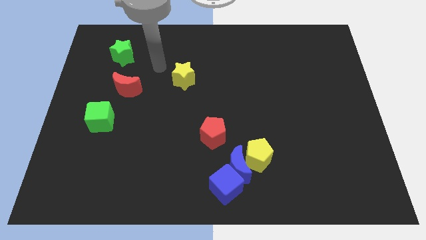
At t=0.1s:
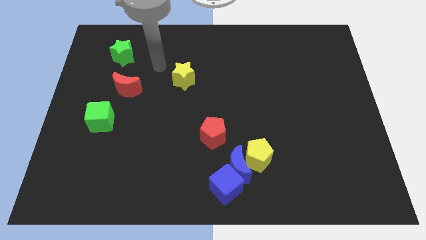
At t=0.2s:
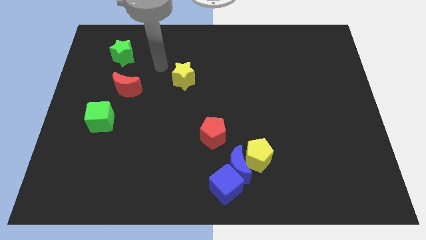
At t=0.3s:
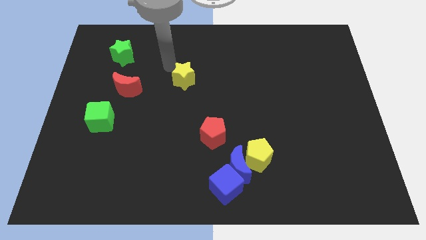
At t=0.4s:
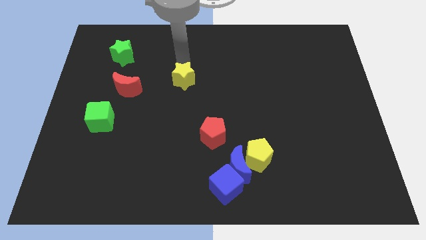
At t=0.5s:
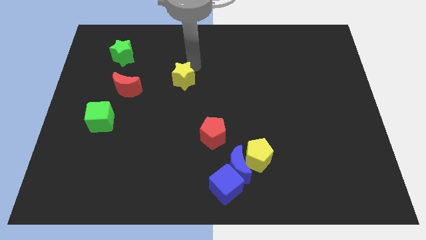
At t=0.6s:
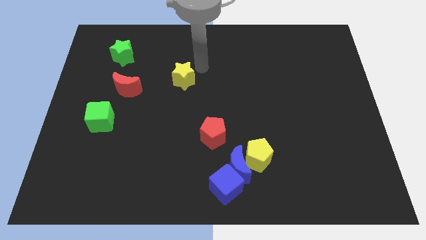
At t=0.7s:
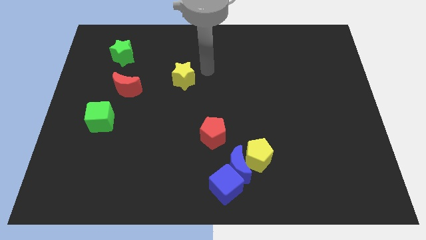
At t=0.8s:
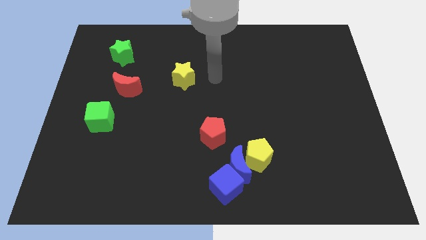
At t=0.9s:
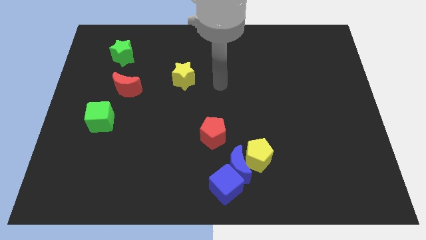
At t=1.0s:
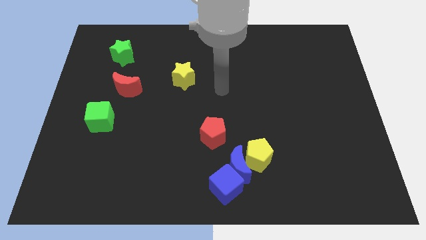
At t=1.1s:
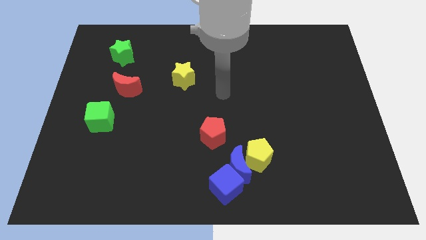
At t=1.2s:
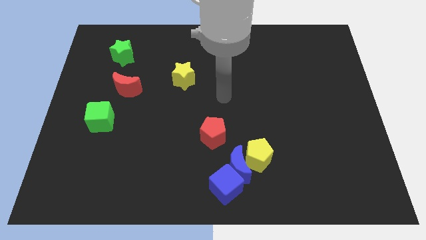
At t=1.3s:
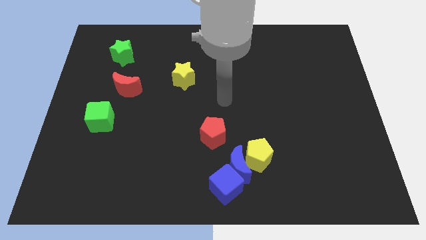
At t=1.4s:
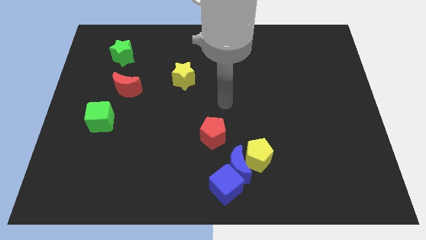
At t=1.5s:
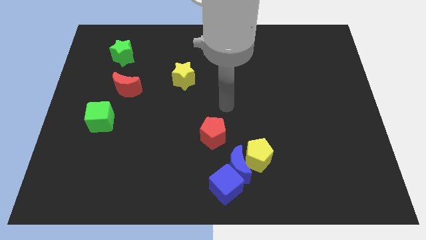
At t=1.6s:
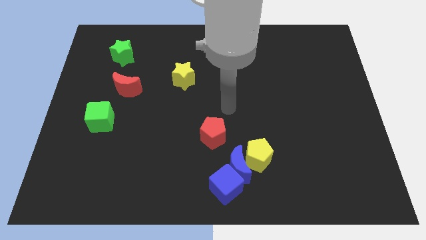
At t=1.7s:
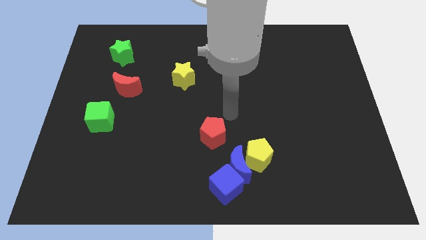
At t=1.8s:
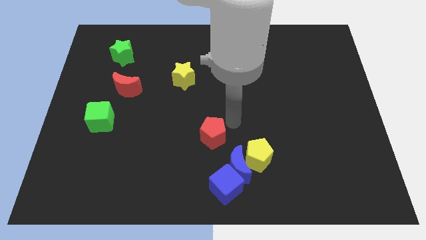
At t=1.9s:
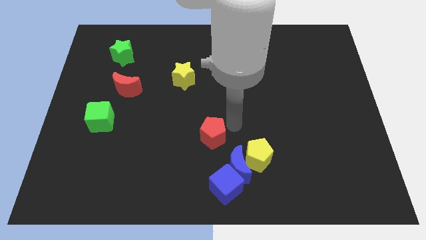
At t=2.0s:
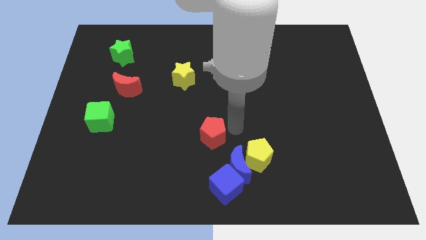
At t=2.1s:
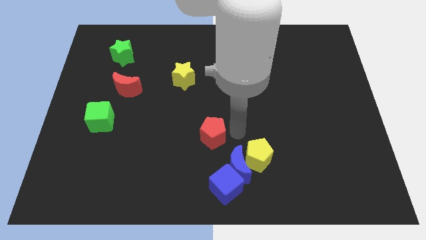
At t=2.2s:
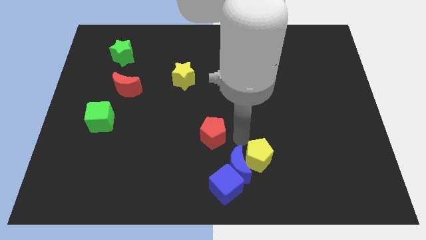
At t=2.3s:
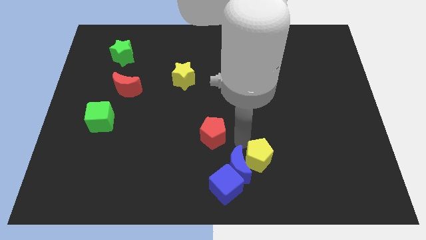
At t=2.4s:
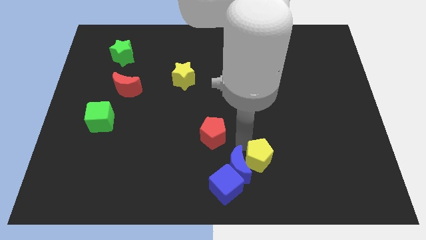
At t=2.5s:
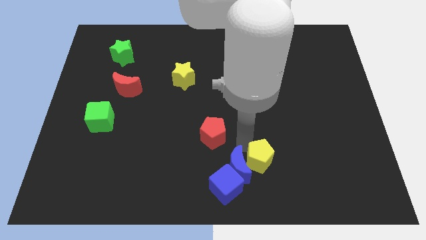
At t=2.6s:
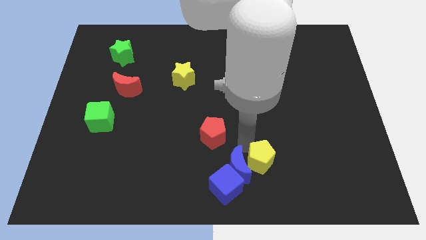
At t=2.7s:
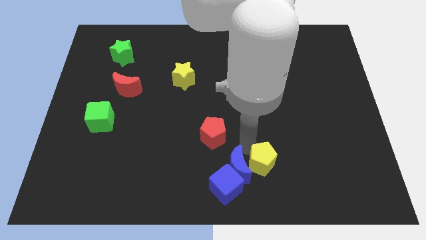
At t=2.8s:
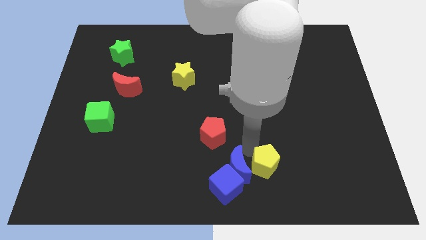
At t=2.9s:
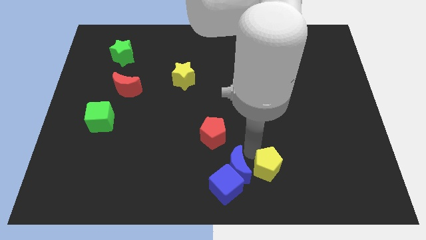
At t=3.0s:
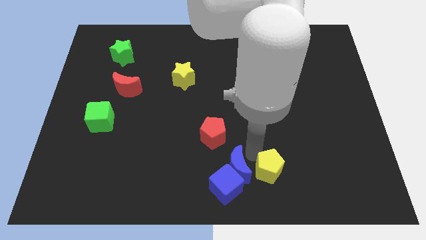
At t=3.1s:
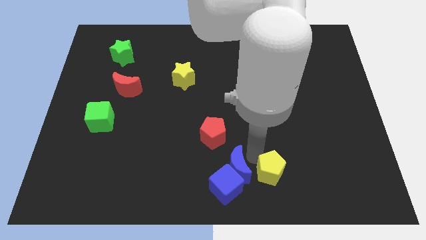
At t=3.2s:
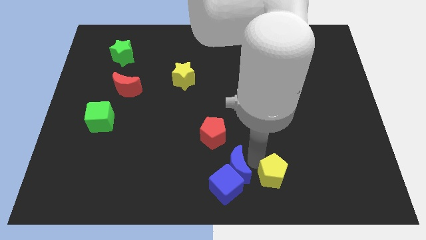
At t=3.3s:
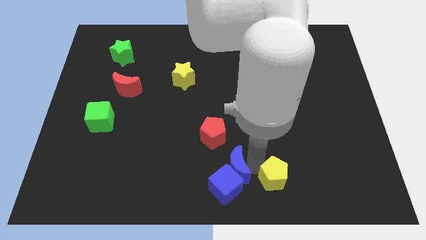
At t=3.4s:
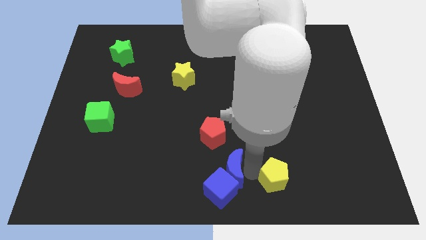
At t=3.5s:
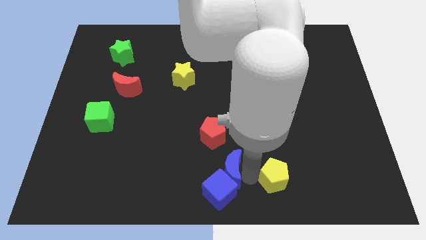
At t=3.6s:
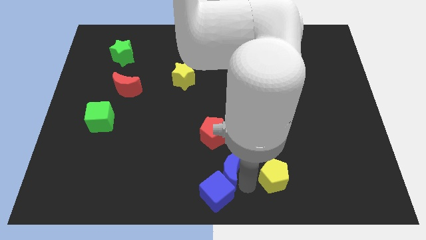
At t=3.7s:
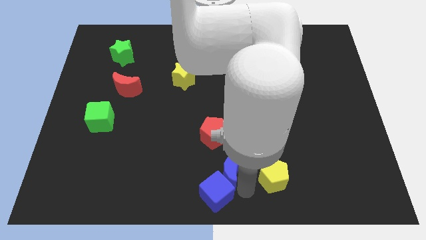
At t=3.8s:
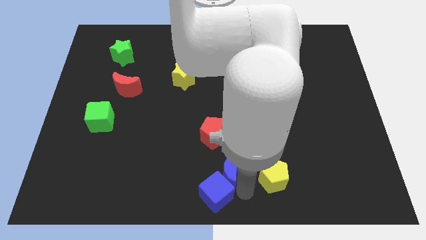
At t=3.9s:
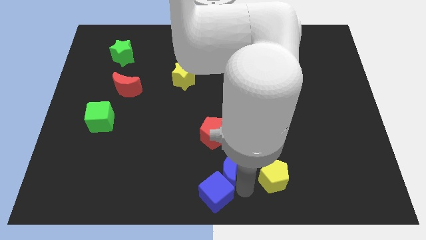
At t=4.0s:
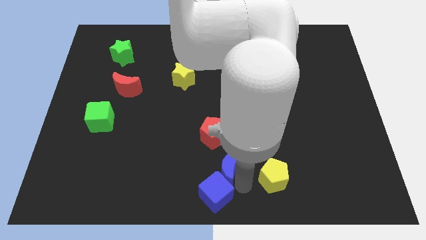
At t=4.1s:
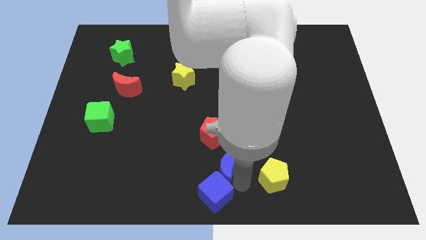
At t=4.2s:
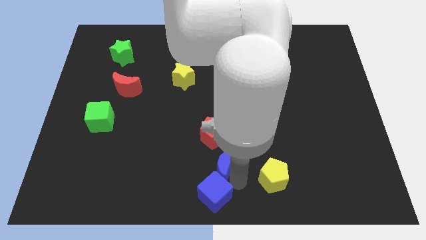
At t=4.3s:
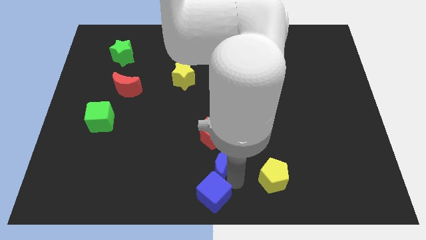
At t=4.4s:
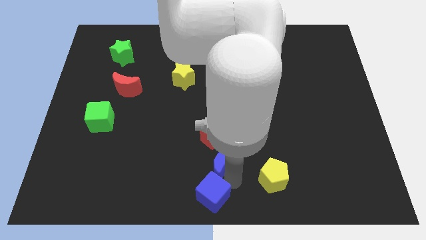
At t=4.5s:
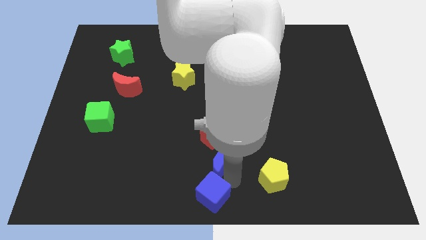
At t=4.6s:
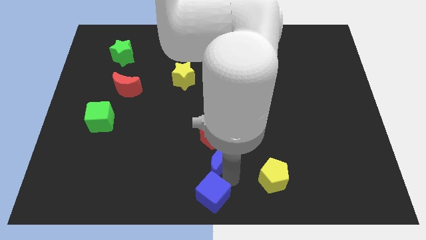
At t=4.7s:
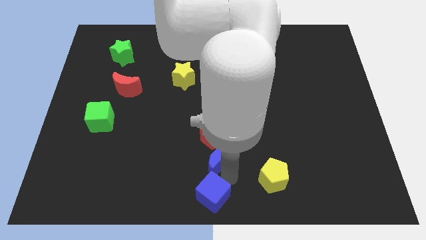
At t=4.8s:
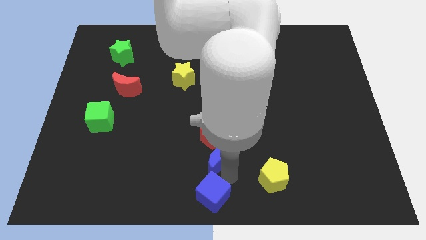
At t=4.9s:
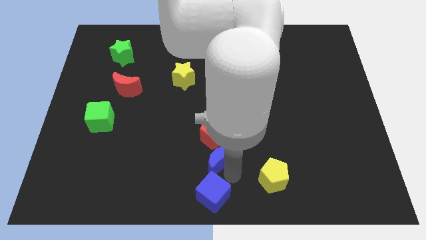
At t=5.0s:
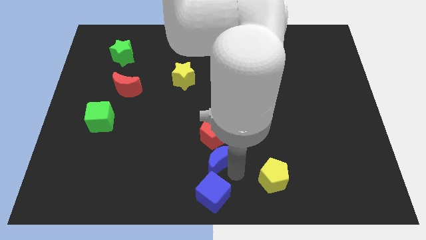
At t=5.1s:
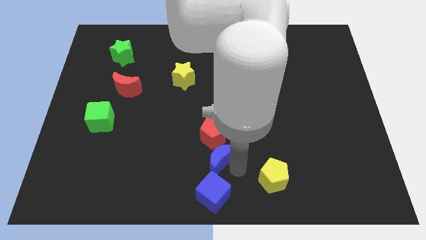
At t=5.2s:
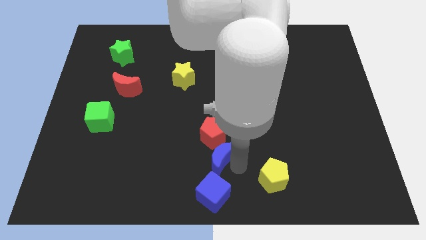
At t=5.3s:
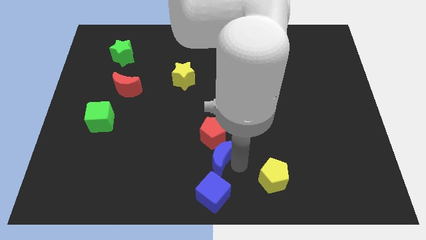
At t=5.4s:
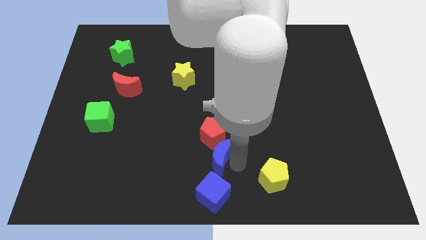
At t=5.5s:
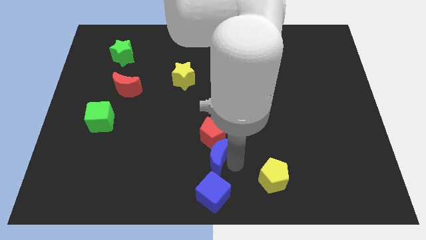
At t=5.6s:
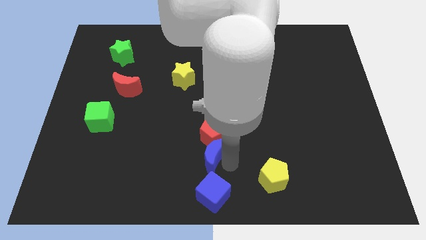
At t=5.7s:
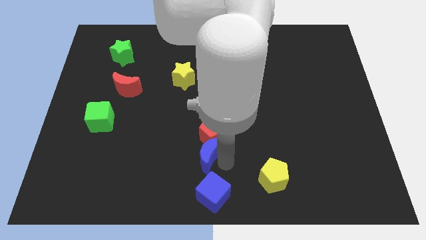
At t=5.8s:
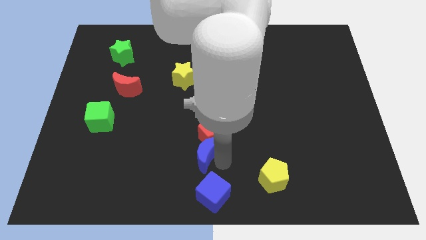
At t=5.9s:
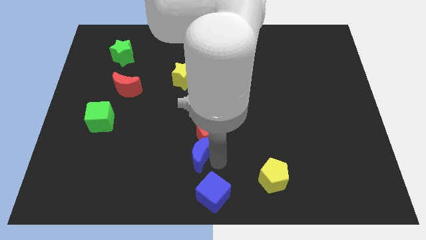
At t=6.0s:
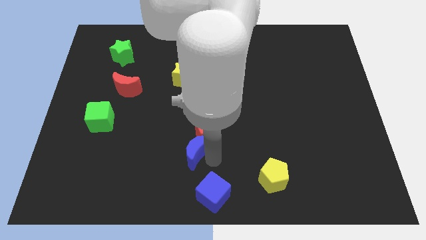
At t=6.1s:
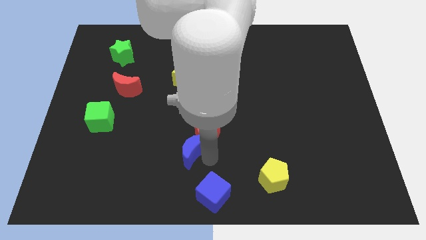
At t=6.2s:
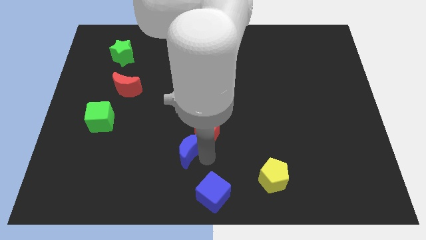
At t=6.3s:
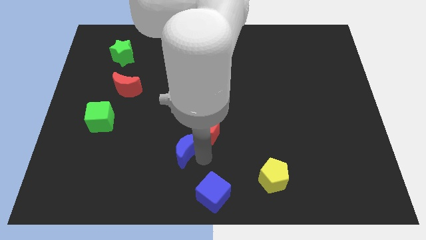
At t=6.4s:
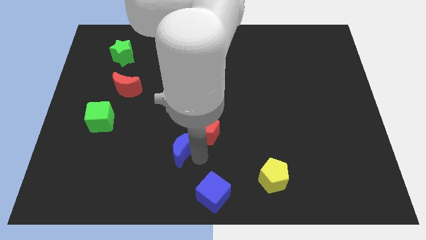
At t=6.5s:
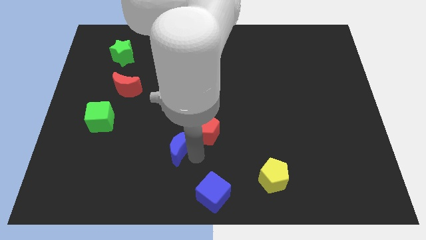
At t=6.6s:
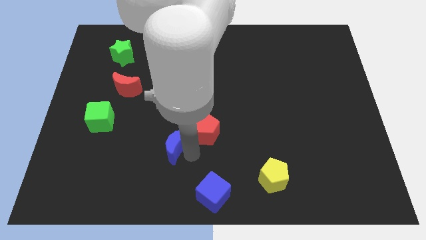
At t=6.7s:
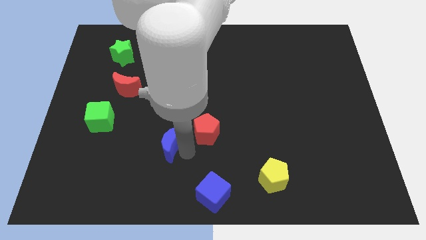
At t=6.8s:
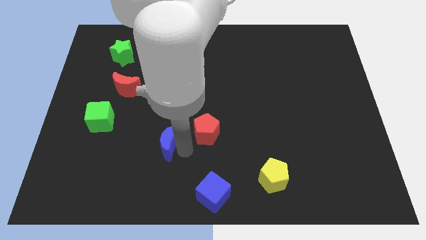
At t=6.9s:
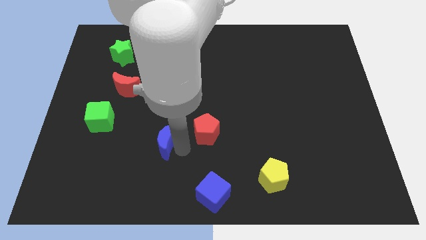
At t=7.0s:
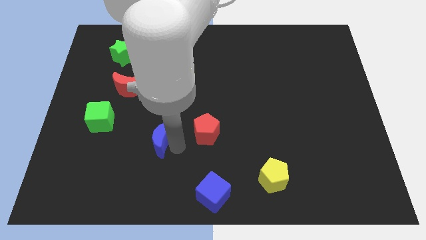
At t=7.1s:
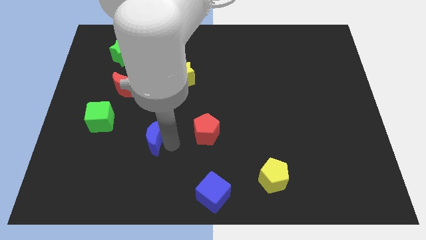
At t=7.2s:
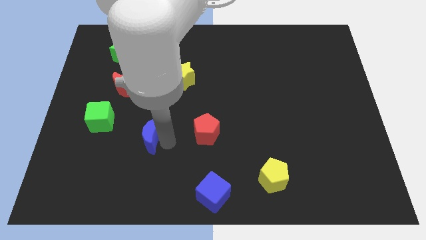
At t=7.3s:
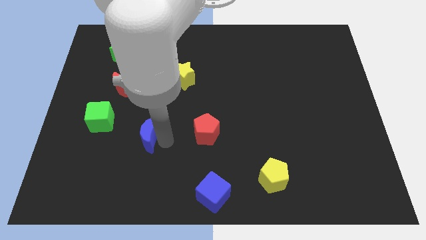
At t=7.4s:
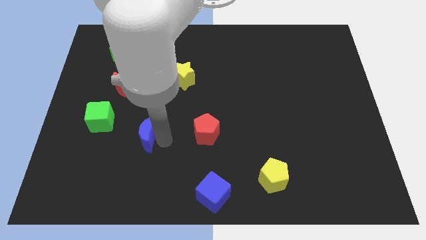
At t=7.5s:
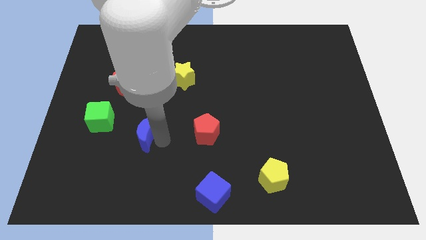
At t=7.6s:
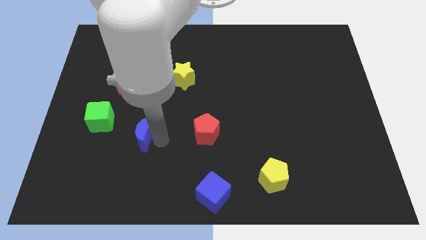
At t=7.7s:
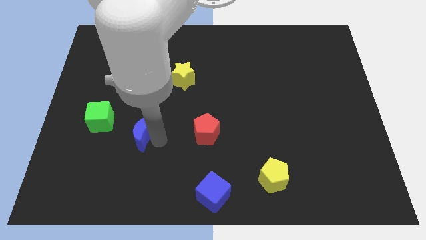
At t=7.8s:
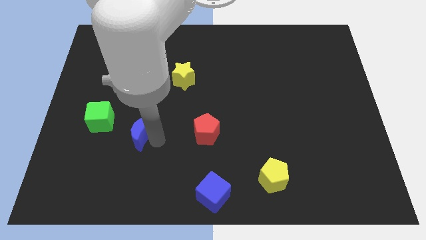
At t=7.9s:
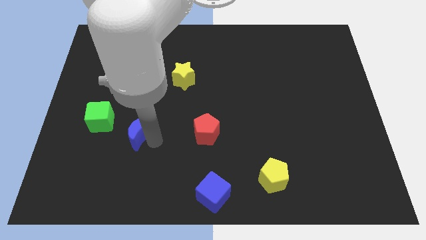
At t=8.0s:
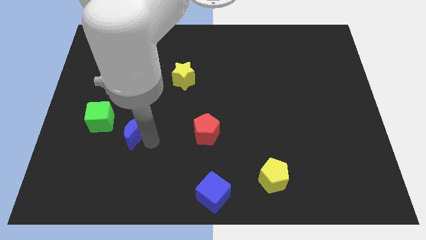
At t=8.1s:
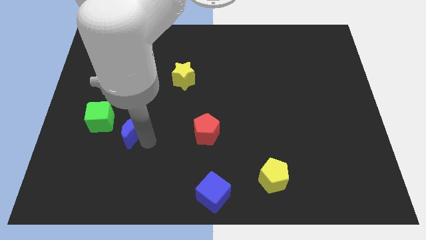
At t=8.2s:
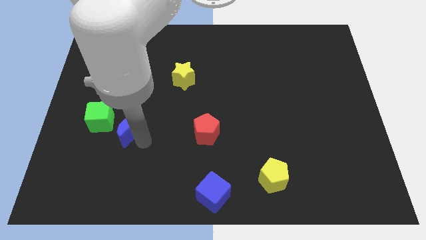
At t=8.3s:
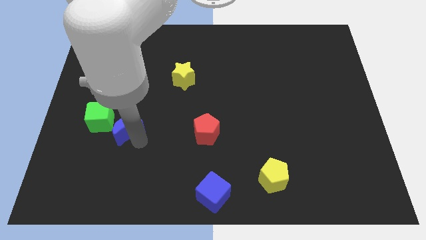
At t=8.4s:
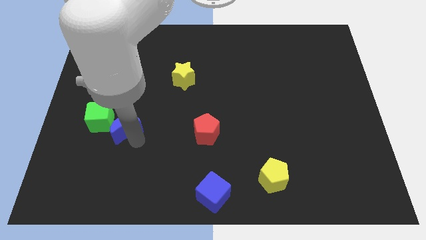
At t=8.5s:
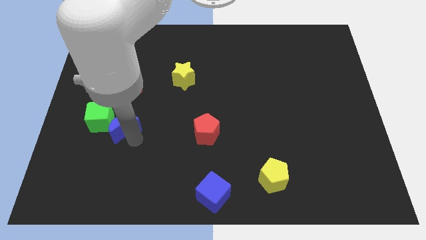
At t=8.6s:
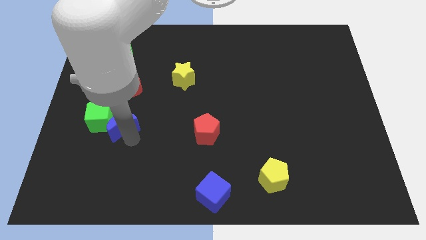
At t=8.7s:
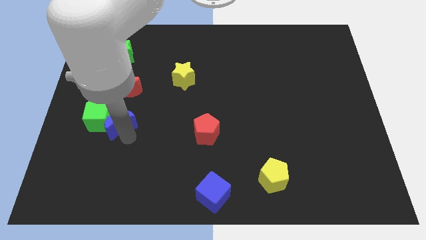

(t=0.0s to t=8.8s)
move the blue moon to the green cube
